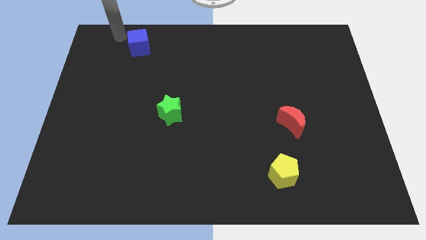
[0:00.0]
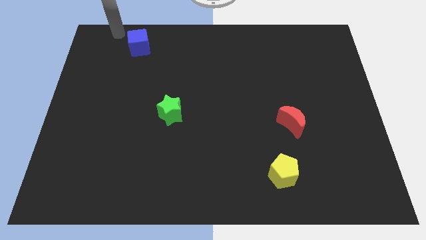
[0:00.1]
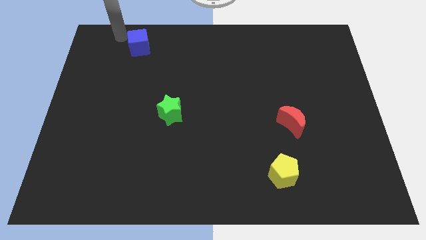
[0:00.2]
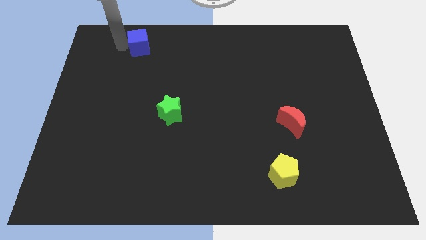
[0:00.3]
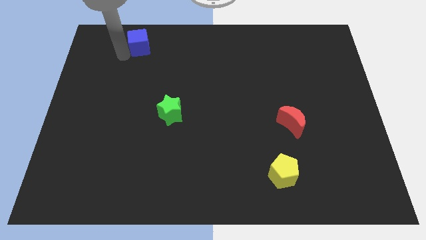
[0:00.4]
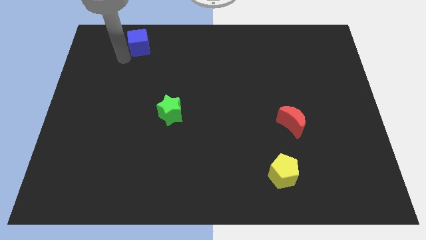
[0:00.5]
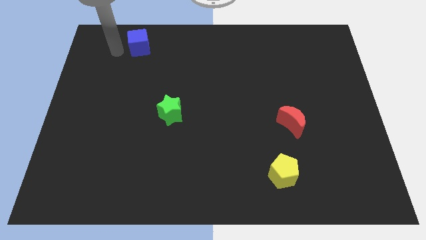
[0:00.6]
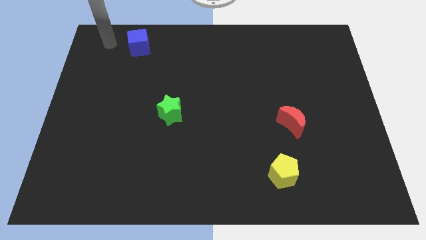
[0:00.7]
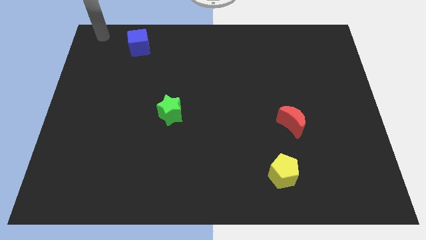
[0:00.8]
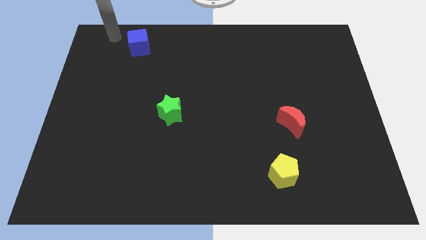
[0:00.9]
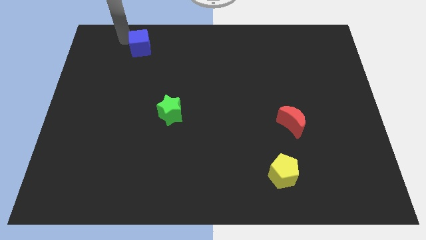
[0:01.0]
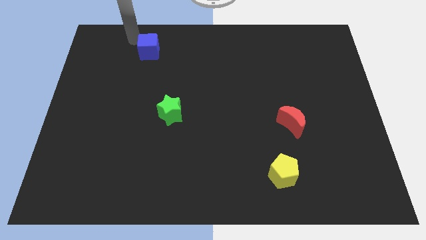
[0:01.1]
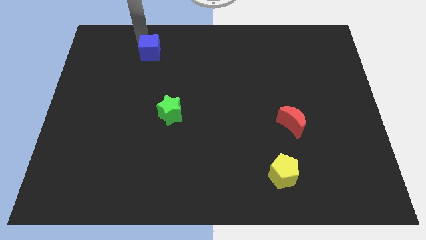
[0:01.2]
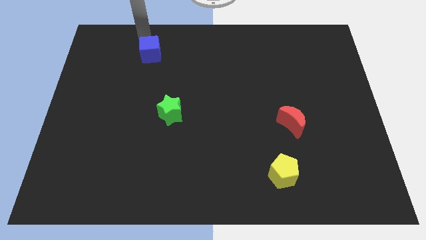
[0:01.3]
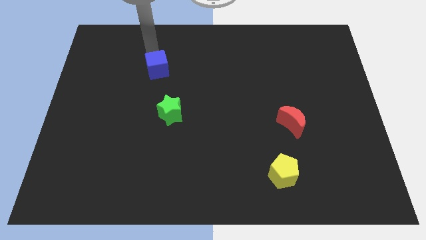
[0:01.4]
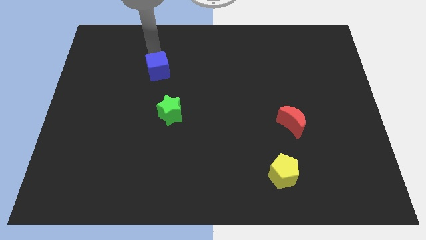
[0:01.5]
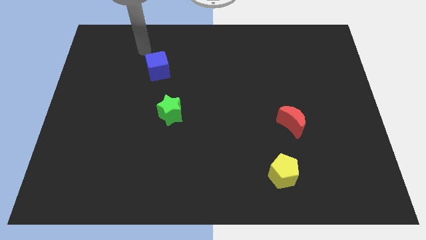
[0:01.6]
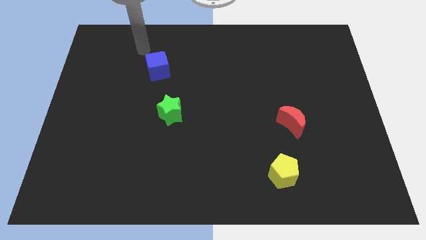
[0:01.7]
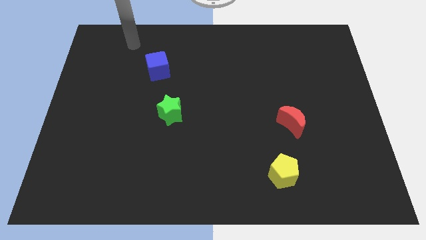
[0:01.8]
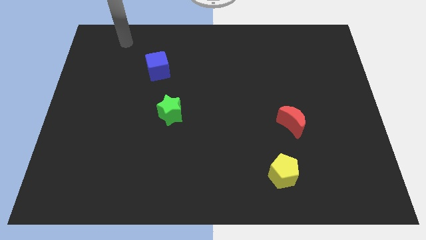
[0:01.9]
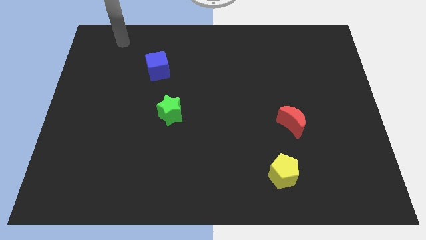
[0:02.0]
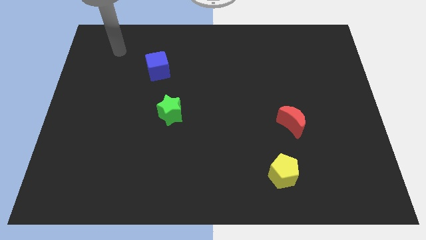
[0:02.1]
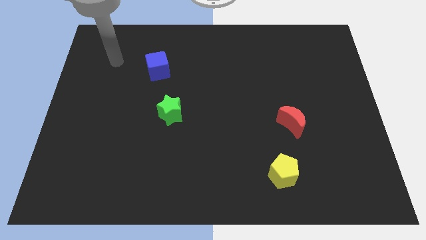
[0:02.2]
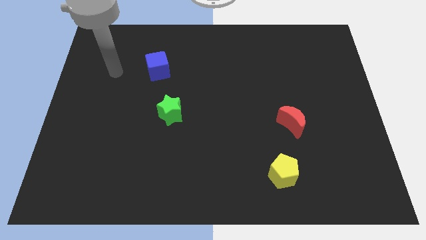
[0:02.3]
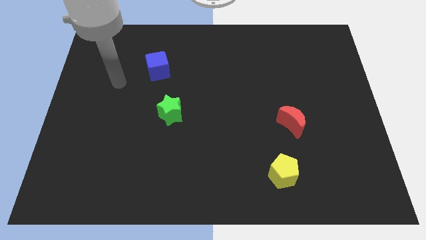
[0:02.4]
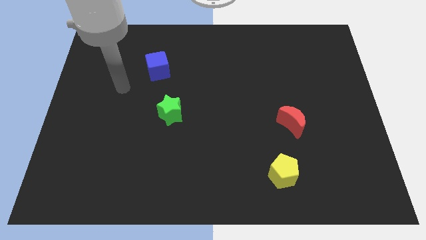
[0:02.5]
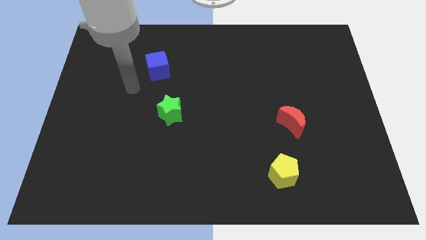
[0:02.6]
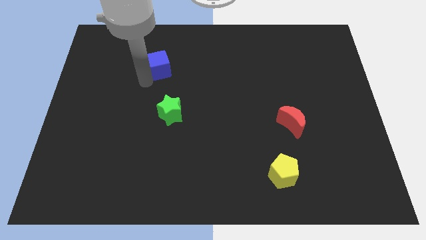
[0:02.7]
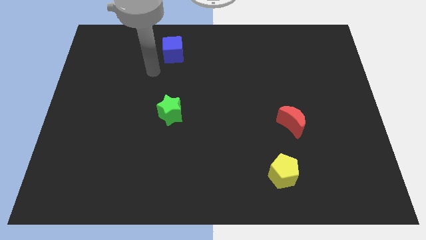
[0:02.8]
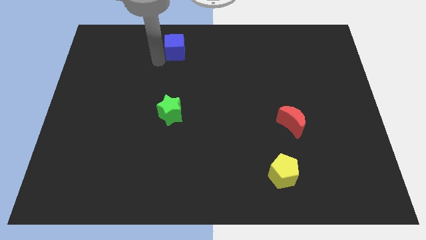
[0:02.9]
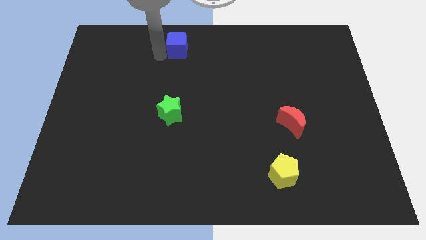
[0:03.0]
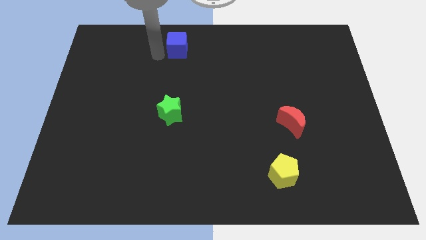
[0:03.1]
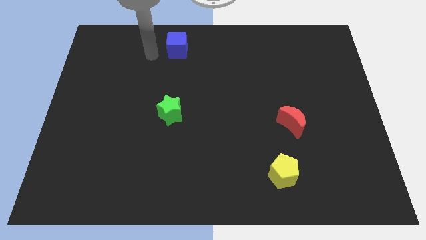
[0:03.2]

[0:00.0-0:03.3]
place the blue cube vertically at the top side of the green star

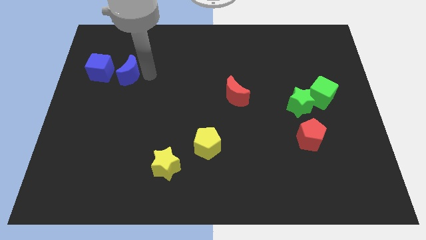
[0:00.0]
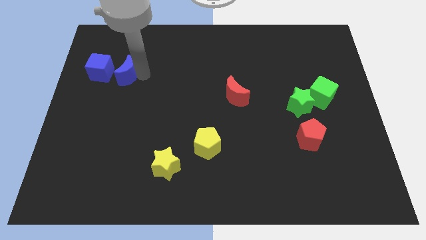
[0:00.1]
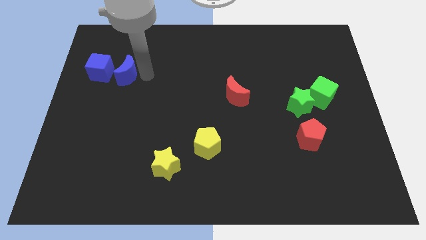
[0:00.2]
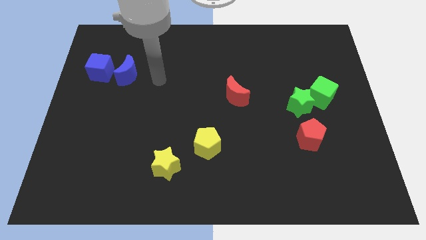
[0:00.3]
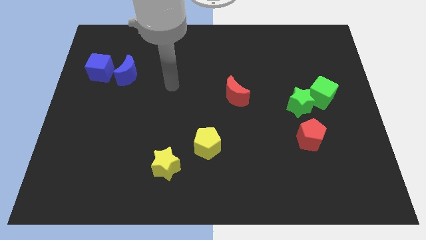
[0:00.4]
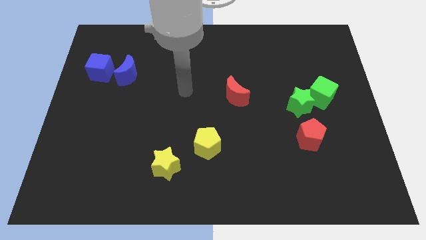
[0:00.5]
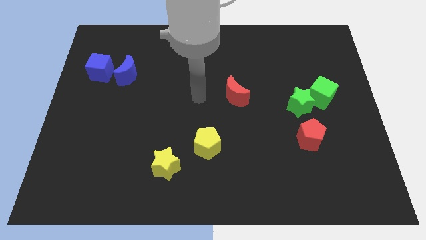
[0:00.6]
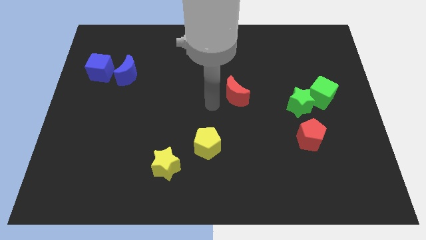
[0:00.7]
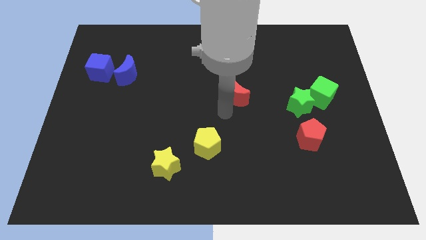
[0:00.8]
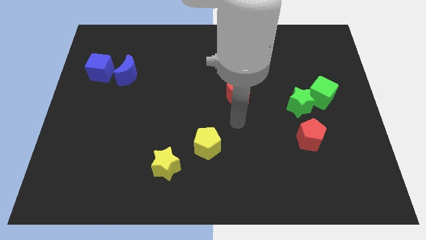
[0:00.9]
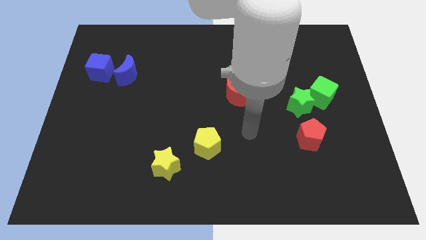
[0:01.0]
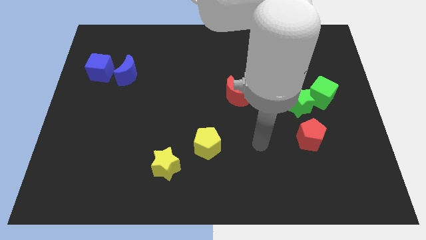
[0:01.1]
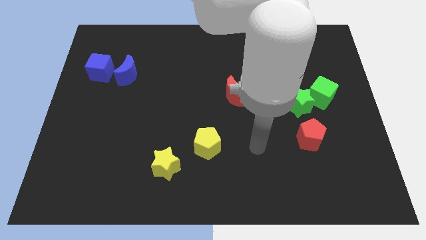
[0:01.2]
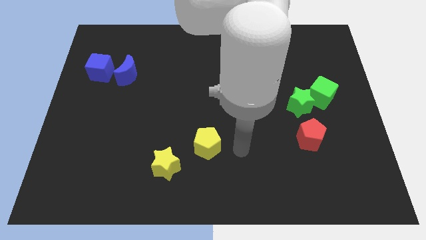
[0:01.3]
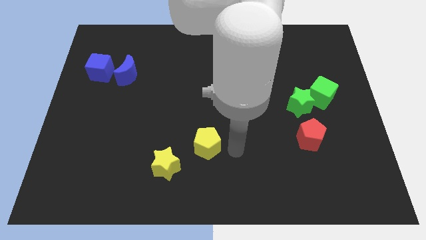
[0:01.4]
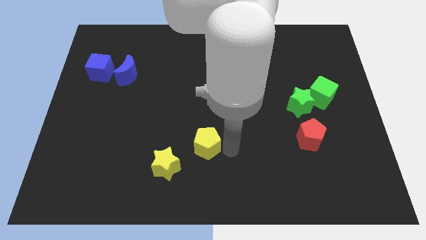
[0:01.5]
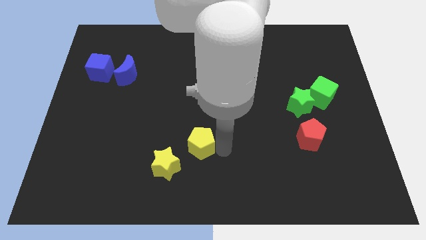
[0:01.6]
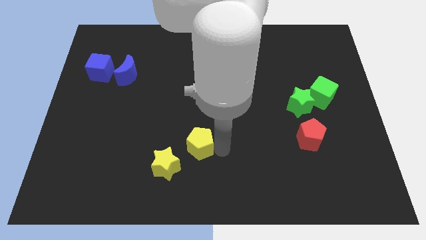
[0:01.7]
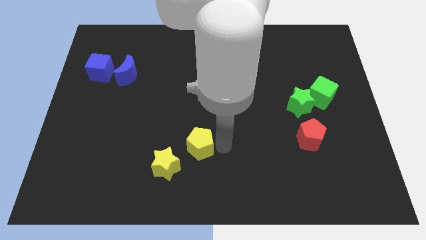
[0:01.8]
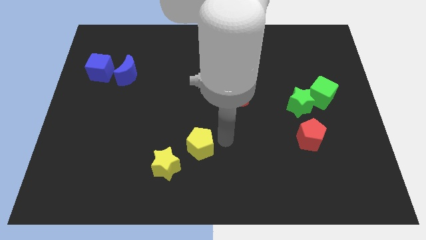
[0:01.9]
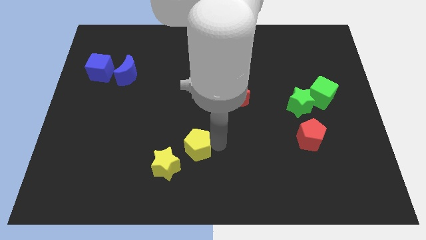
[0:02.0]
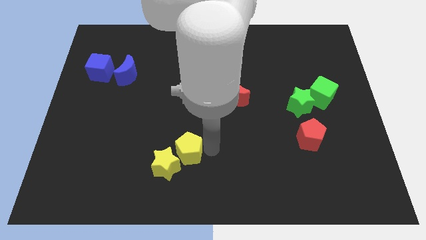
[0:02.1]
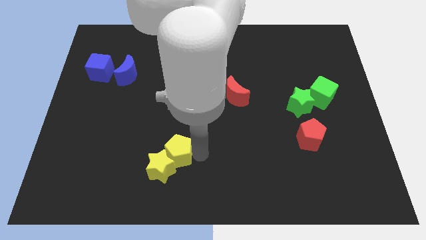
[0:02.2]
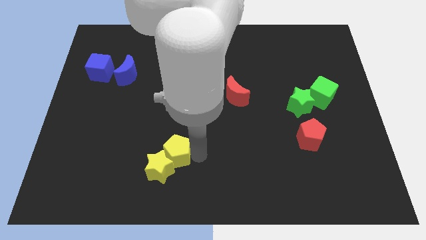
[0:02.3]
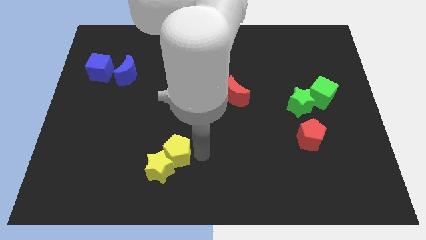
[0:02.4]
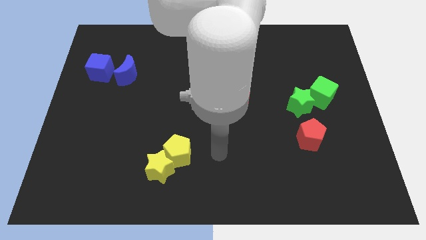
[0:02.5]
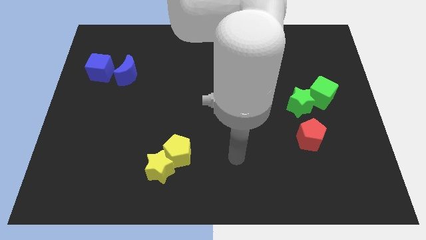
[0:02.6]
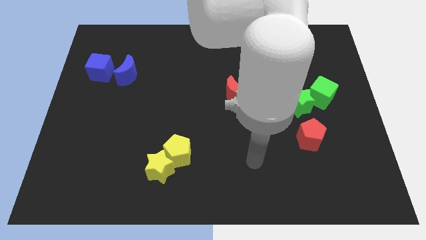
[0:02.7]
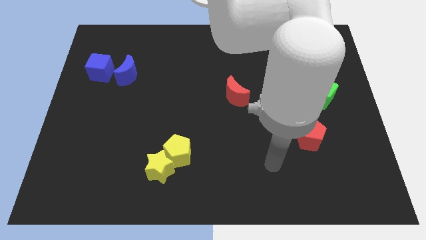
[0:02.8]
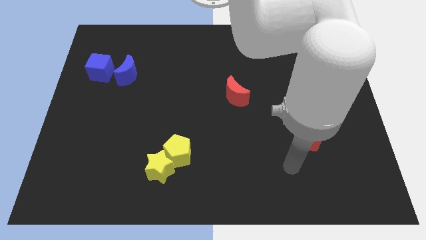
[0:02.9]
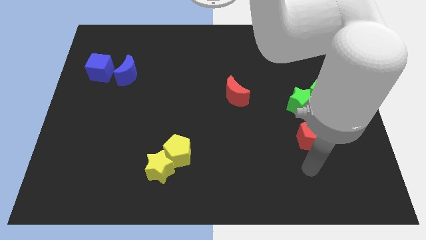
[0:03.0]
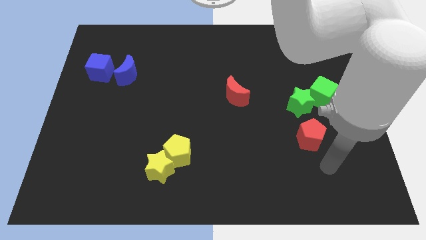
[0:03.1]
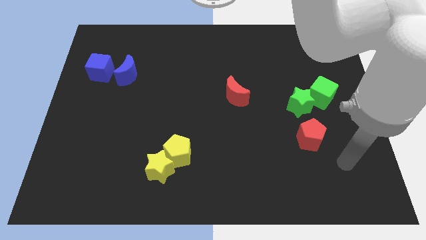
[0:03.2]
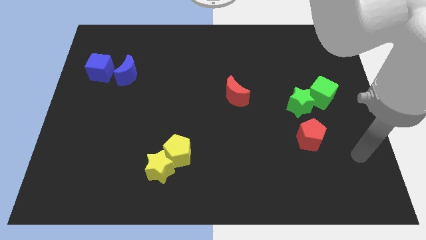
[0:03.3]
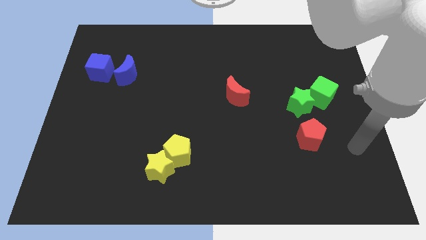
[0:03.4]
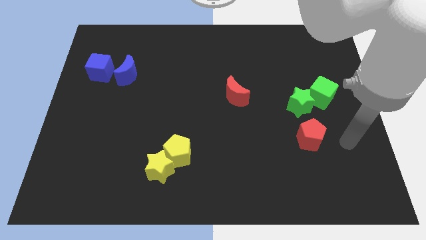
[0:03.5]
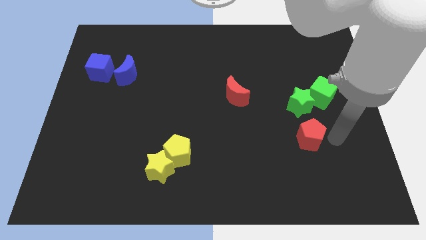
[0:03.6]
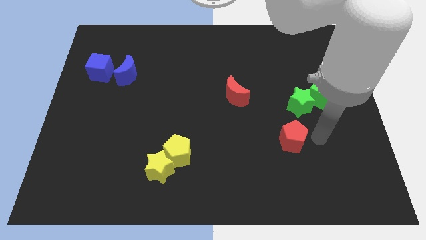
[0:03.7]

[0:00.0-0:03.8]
move yellow pentagon into yellow star

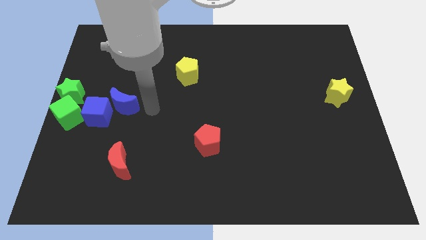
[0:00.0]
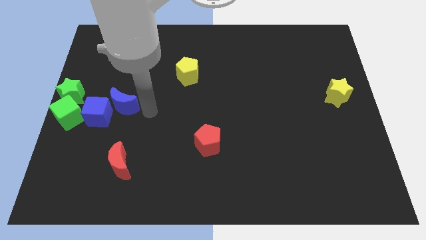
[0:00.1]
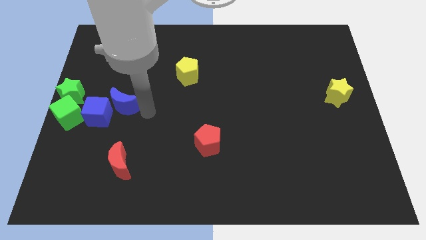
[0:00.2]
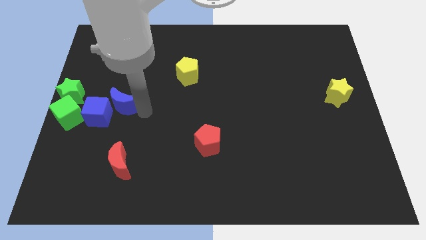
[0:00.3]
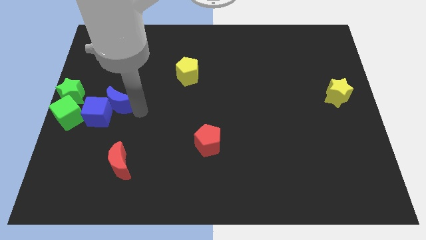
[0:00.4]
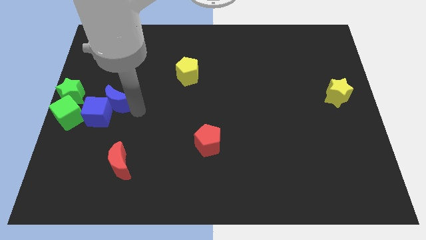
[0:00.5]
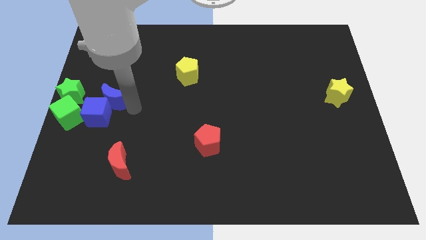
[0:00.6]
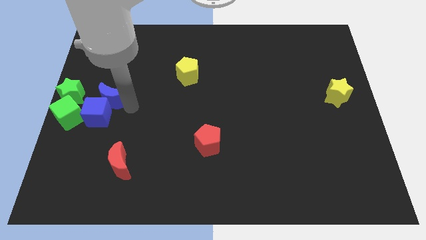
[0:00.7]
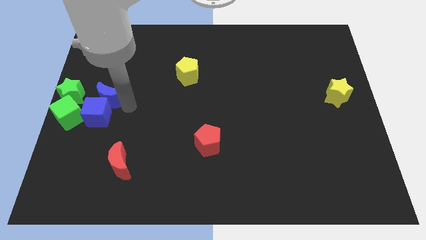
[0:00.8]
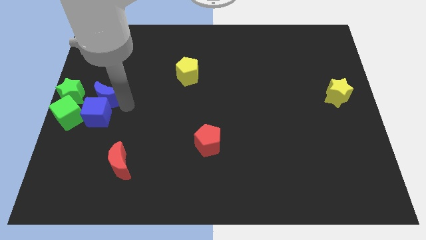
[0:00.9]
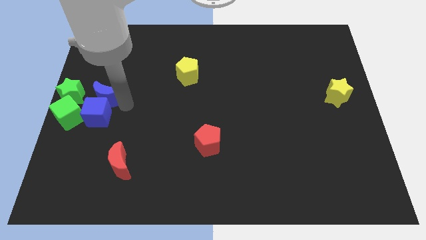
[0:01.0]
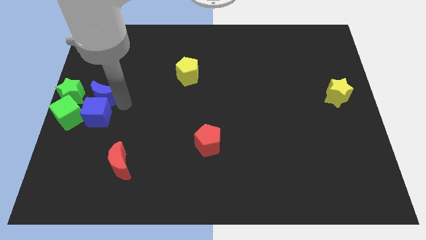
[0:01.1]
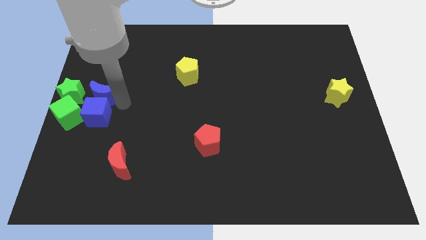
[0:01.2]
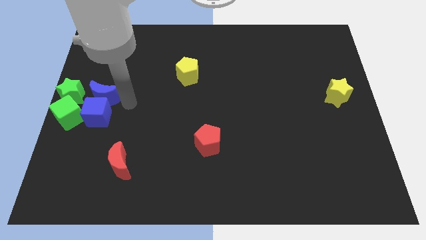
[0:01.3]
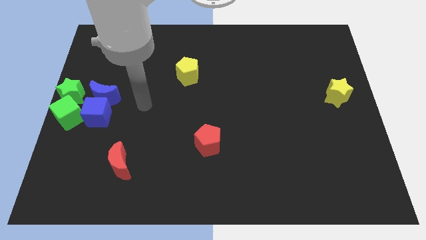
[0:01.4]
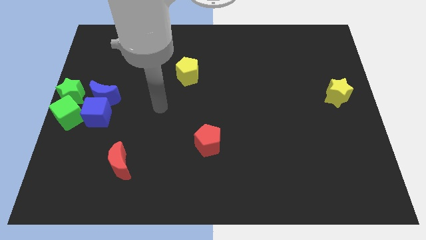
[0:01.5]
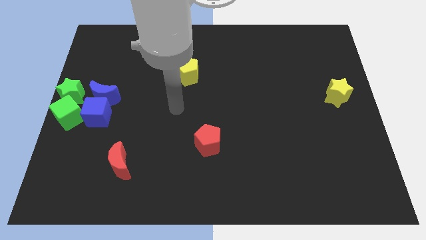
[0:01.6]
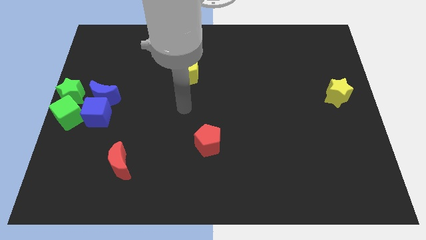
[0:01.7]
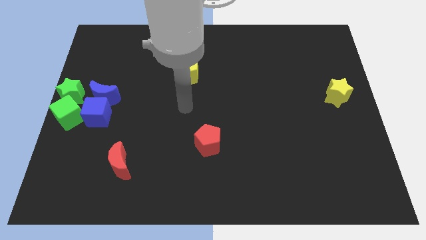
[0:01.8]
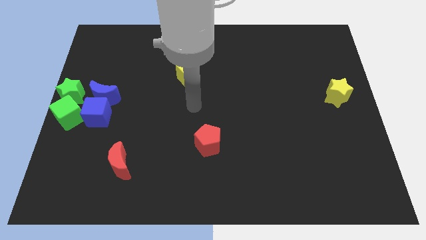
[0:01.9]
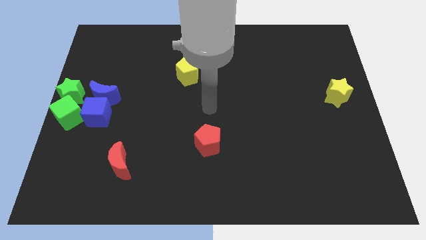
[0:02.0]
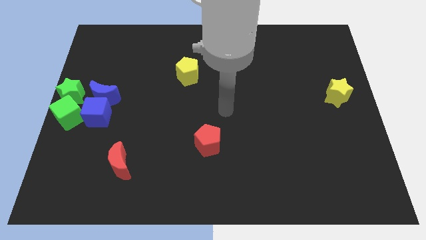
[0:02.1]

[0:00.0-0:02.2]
move blue crescent towards the blue cube
